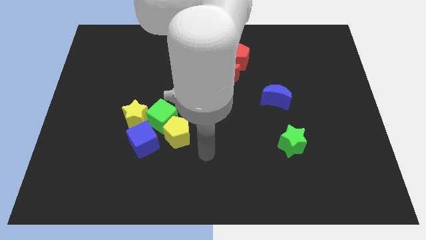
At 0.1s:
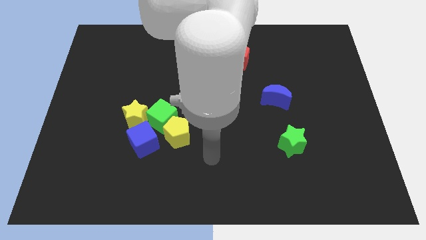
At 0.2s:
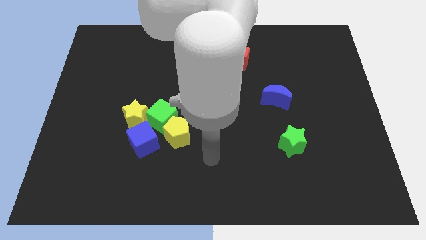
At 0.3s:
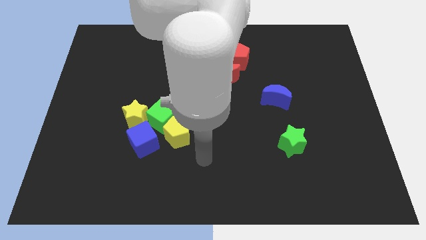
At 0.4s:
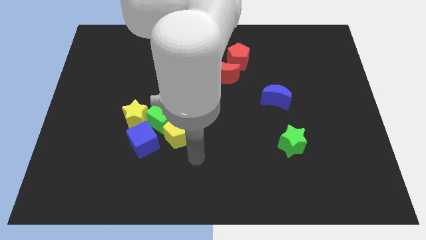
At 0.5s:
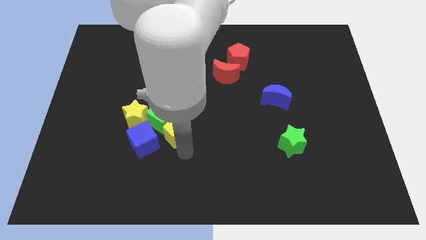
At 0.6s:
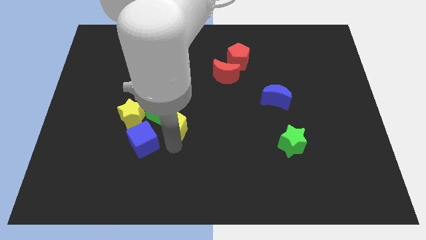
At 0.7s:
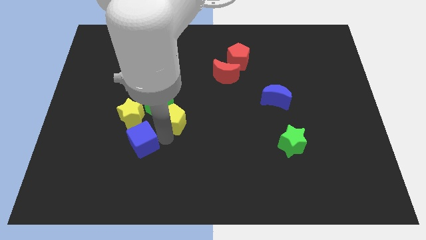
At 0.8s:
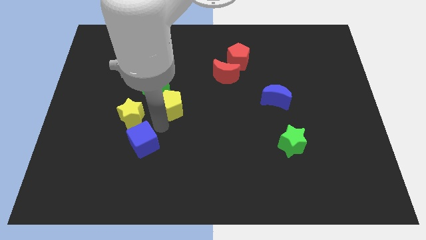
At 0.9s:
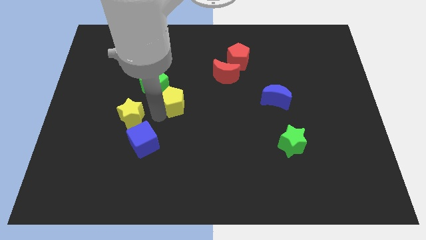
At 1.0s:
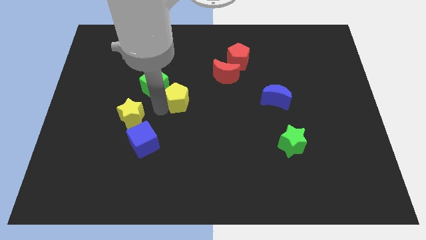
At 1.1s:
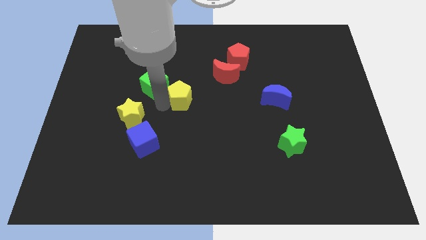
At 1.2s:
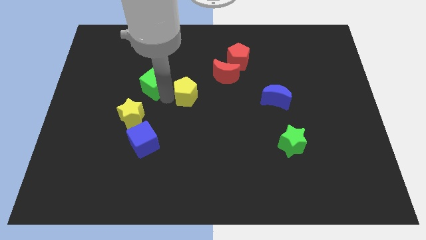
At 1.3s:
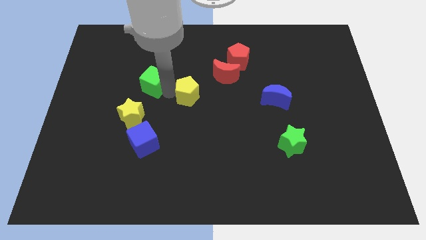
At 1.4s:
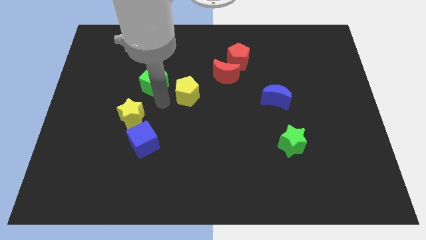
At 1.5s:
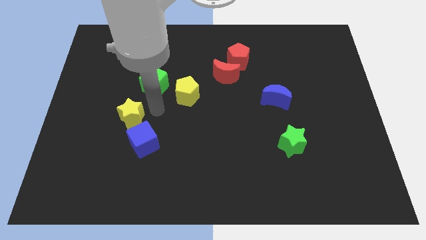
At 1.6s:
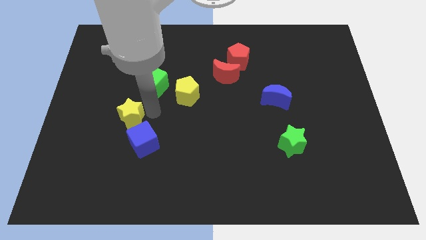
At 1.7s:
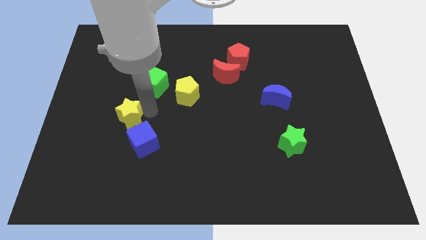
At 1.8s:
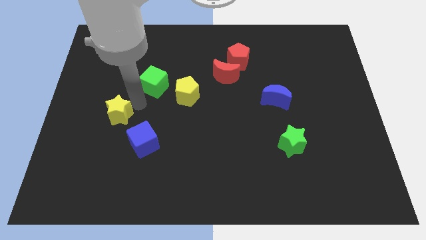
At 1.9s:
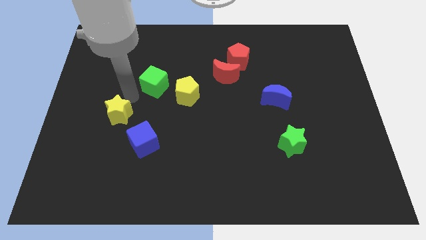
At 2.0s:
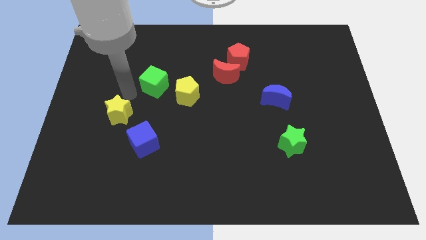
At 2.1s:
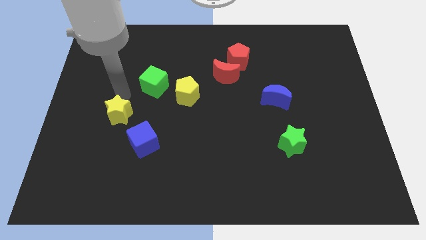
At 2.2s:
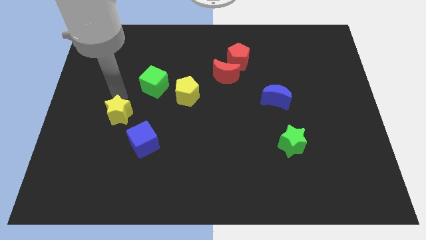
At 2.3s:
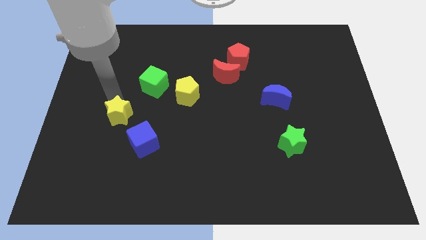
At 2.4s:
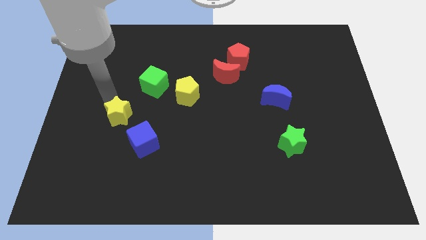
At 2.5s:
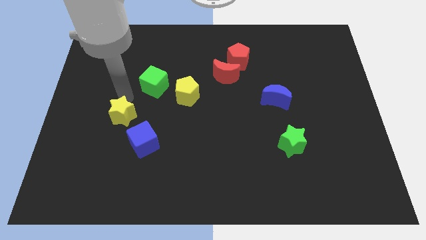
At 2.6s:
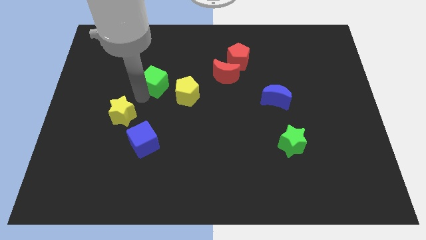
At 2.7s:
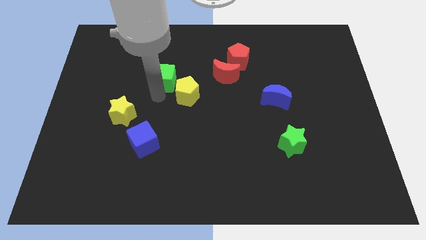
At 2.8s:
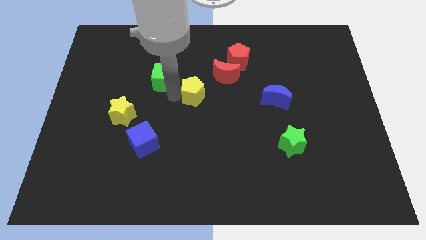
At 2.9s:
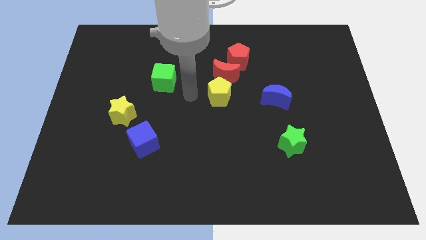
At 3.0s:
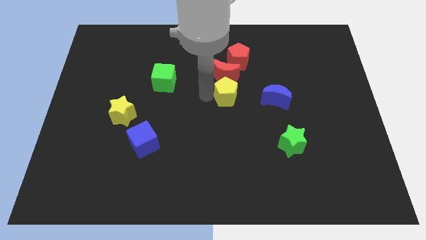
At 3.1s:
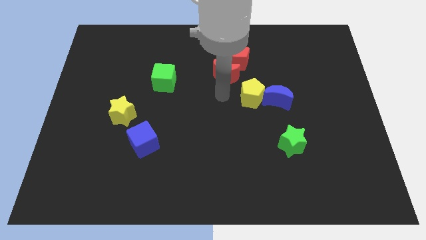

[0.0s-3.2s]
separate the green cube and the yellow blocks

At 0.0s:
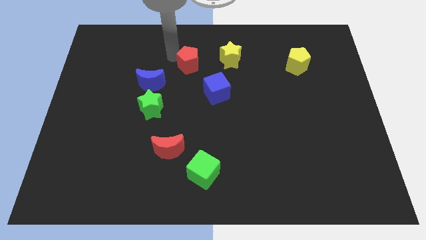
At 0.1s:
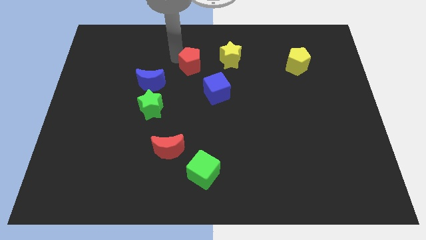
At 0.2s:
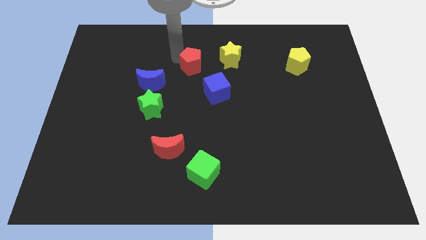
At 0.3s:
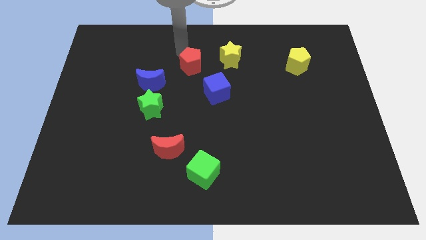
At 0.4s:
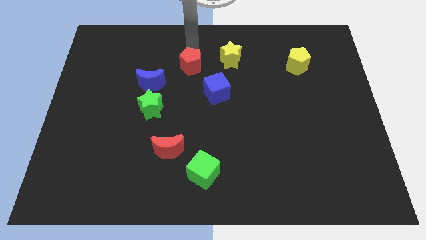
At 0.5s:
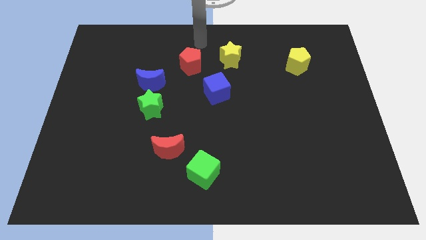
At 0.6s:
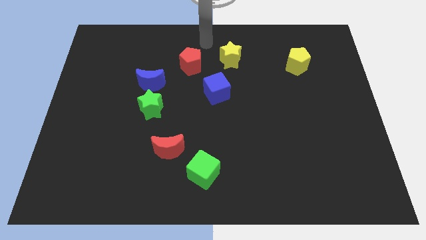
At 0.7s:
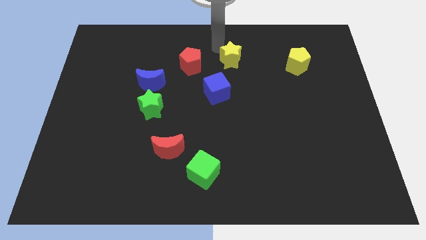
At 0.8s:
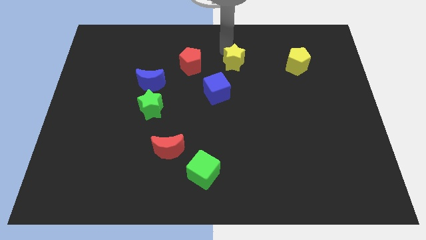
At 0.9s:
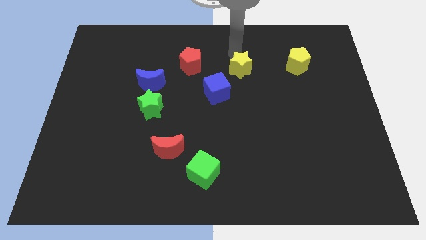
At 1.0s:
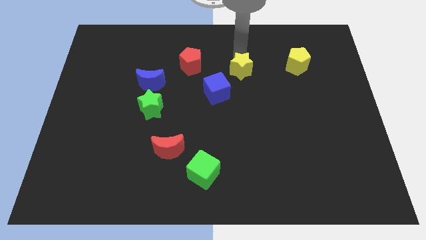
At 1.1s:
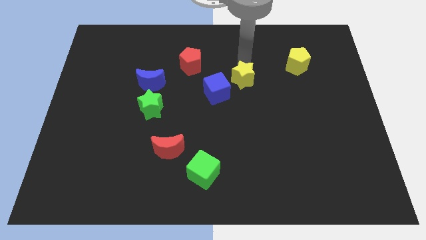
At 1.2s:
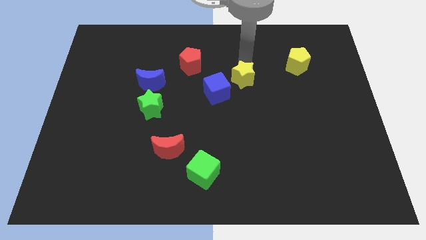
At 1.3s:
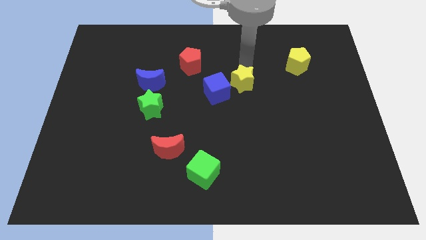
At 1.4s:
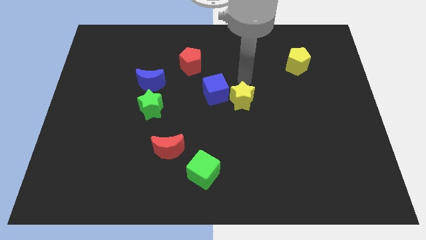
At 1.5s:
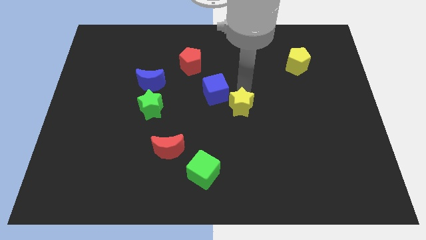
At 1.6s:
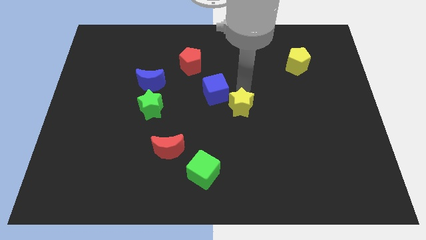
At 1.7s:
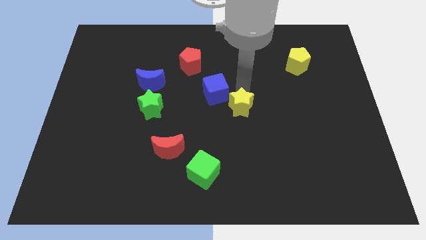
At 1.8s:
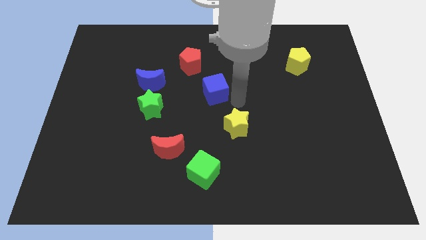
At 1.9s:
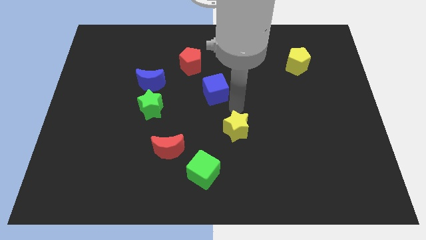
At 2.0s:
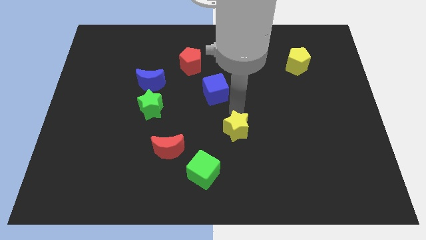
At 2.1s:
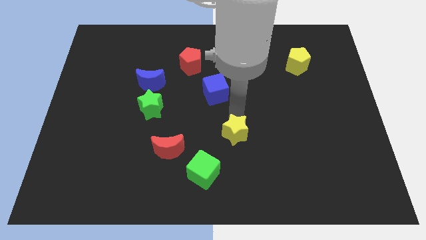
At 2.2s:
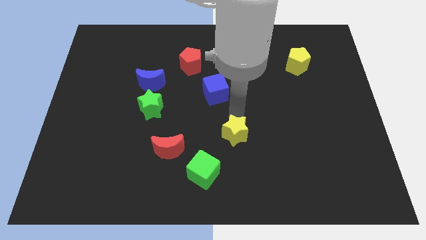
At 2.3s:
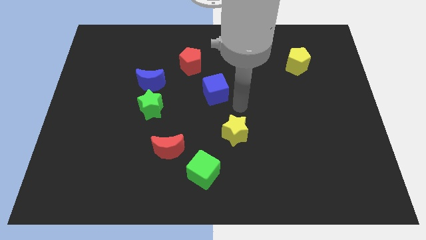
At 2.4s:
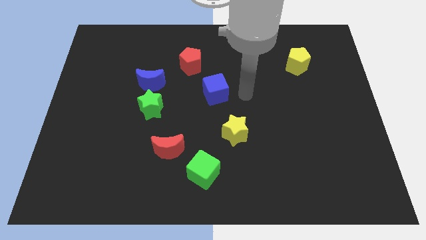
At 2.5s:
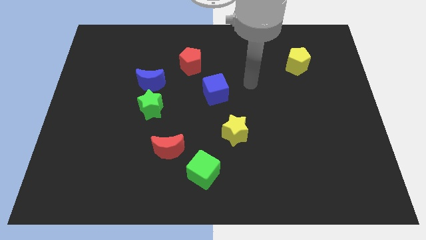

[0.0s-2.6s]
slightly move down the yellow star diagonal to the green star

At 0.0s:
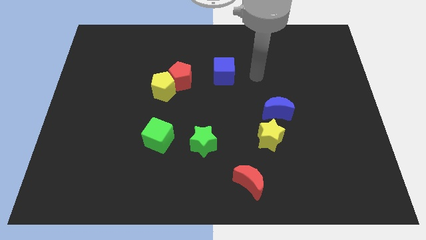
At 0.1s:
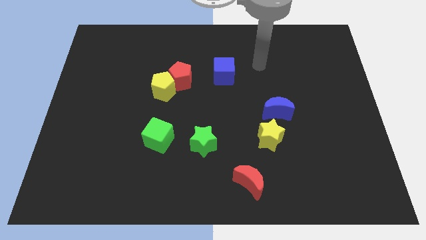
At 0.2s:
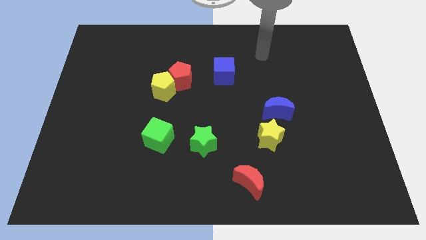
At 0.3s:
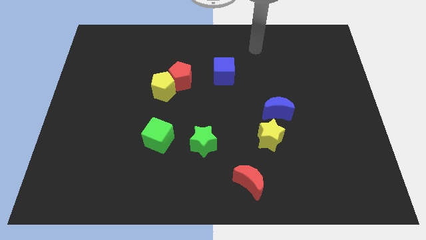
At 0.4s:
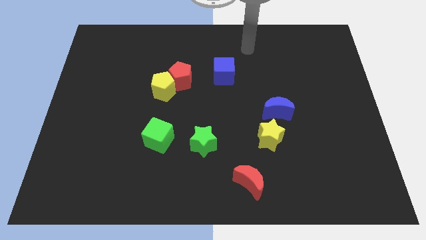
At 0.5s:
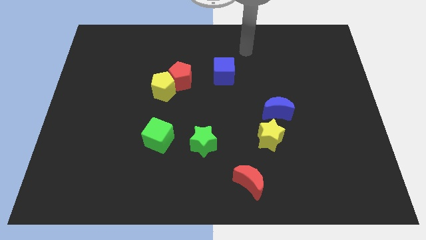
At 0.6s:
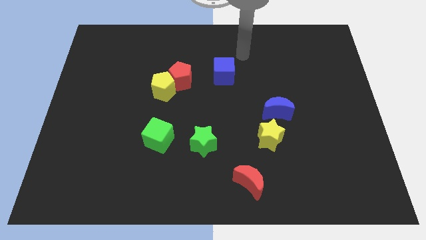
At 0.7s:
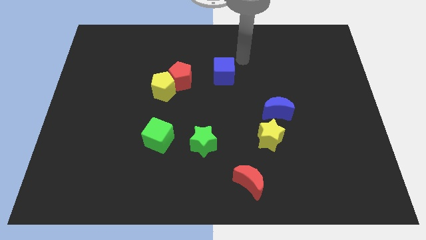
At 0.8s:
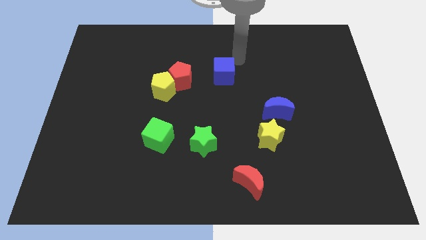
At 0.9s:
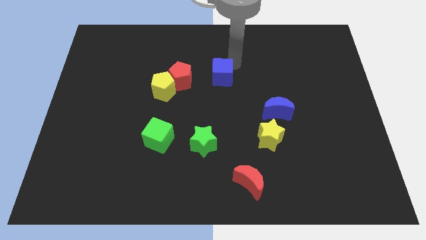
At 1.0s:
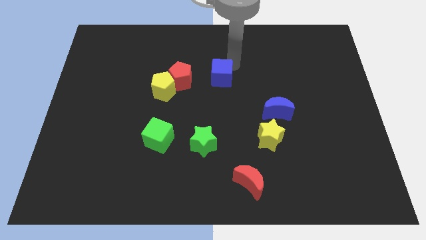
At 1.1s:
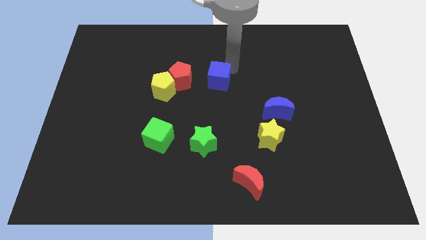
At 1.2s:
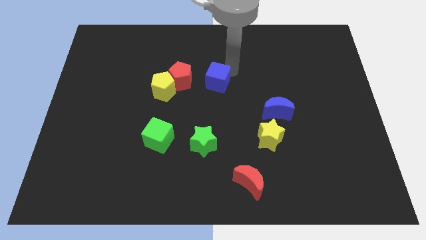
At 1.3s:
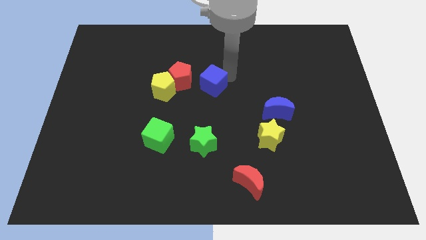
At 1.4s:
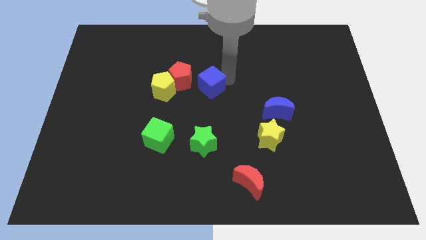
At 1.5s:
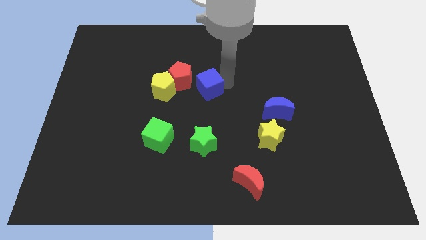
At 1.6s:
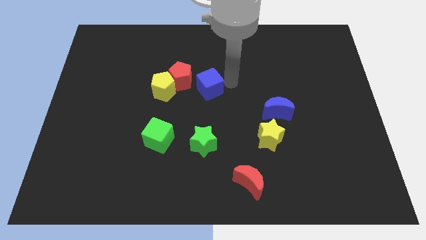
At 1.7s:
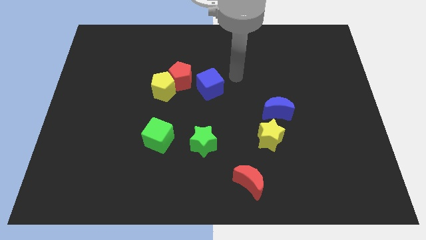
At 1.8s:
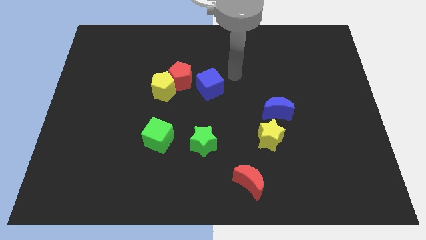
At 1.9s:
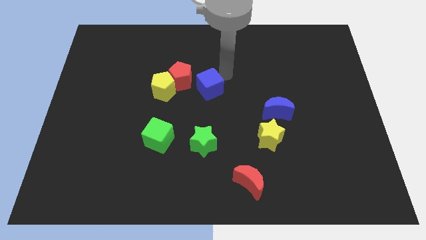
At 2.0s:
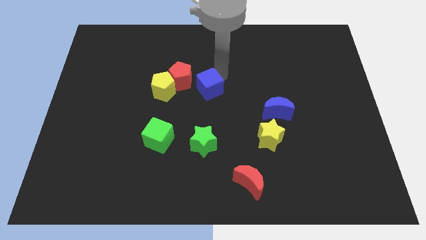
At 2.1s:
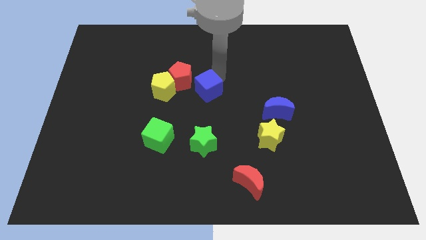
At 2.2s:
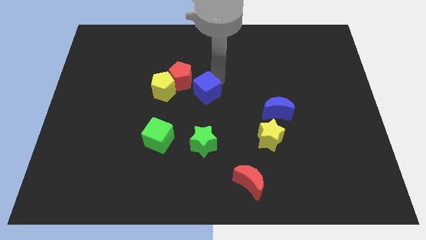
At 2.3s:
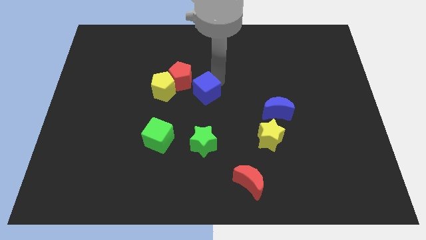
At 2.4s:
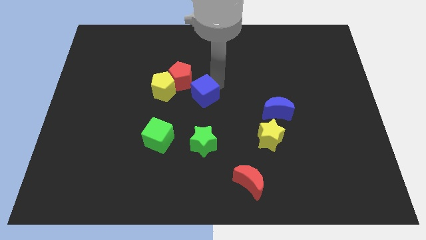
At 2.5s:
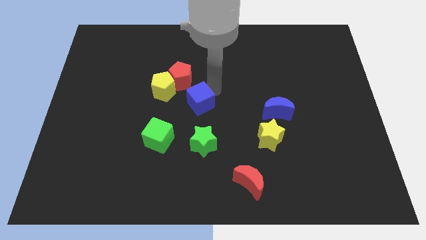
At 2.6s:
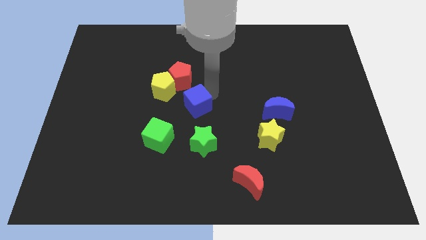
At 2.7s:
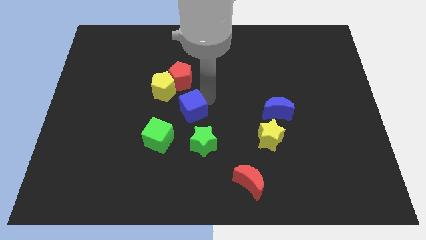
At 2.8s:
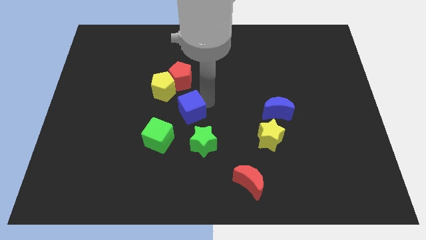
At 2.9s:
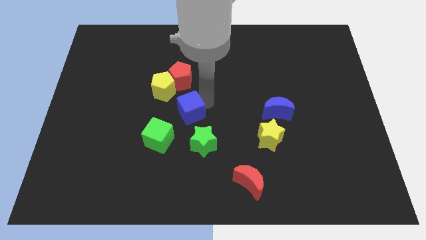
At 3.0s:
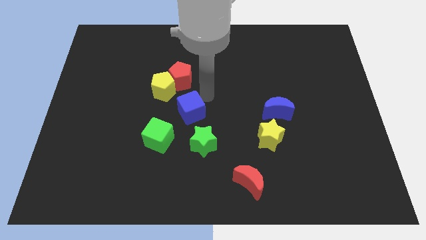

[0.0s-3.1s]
drag the blue cube slightly downwards

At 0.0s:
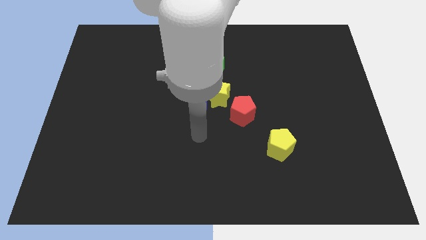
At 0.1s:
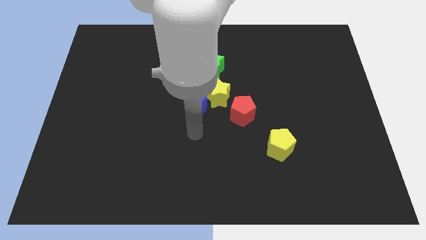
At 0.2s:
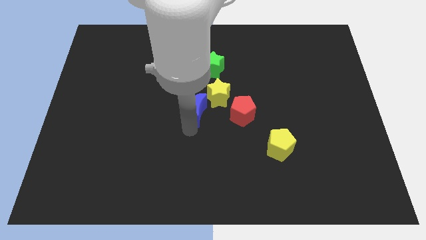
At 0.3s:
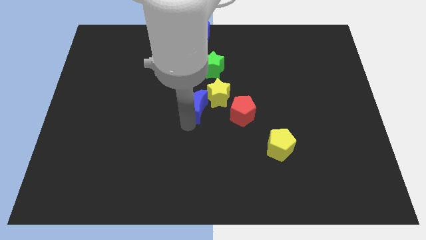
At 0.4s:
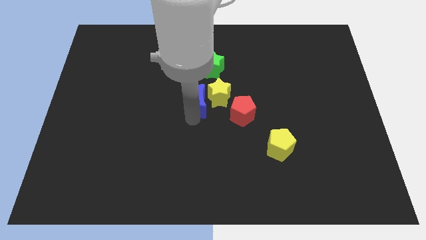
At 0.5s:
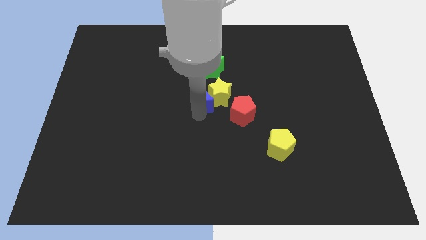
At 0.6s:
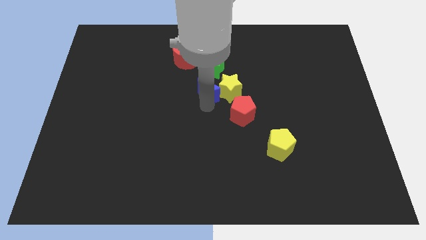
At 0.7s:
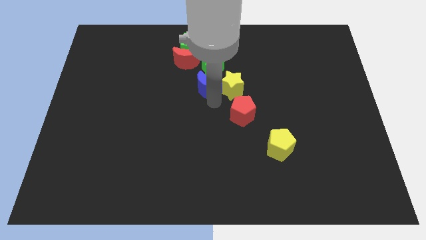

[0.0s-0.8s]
push the blue crescent to the left of the yellow star
